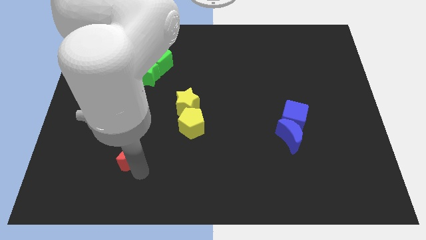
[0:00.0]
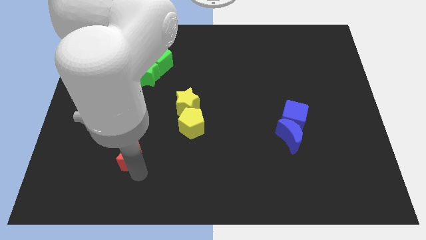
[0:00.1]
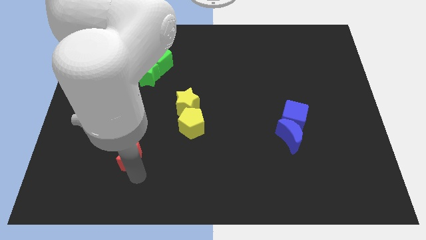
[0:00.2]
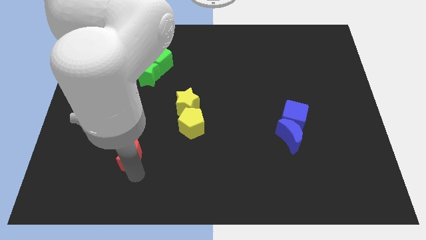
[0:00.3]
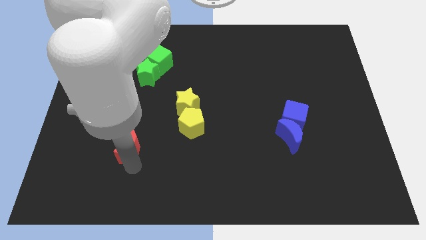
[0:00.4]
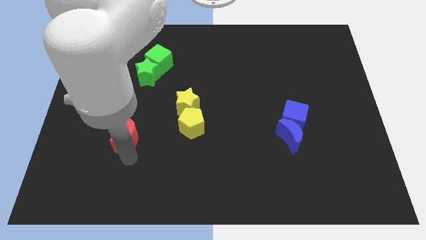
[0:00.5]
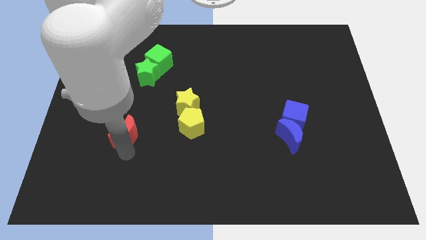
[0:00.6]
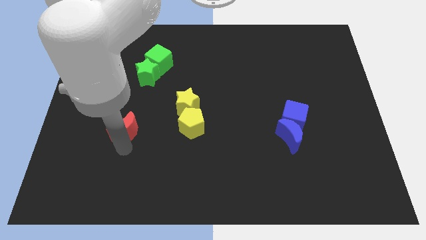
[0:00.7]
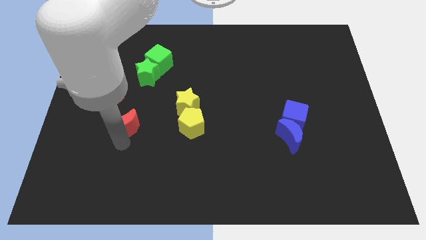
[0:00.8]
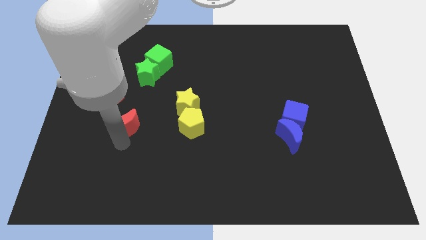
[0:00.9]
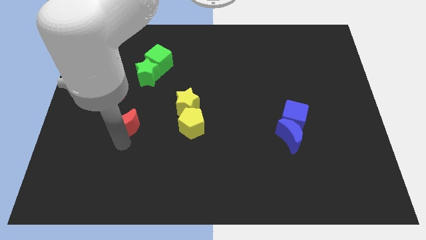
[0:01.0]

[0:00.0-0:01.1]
move the red crescent parallel to the left of the yellow pentagon

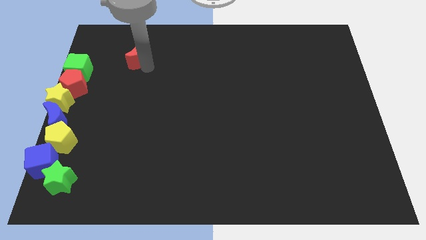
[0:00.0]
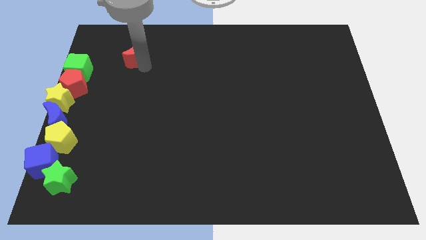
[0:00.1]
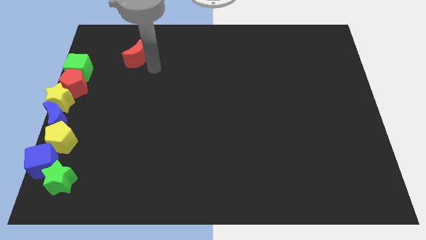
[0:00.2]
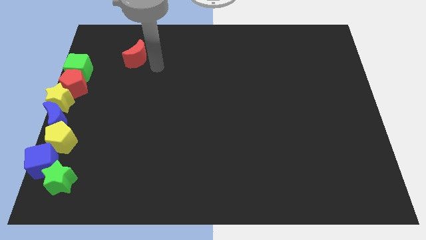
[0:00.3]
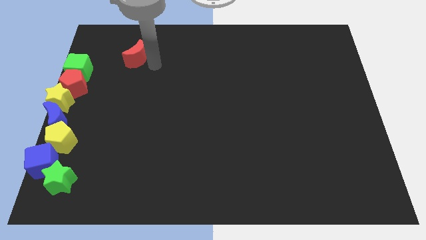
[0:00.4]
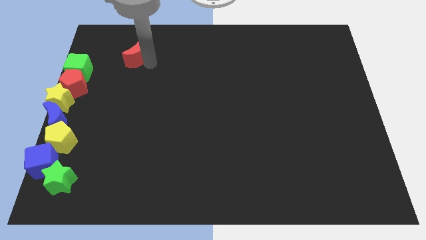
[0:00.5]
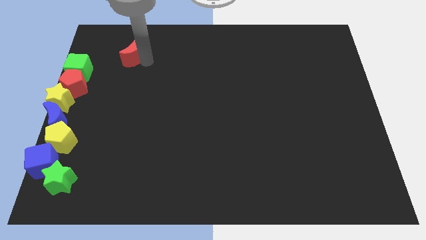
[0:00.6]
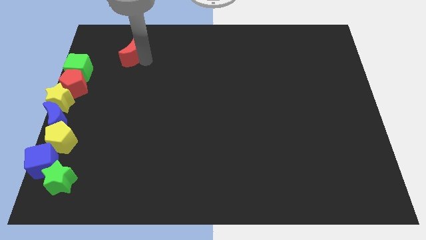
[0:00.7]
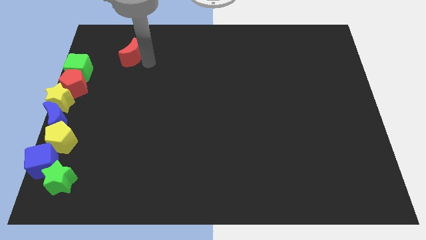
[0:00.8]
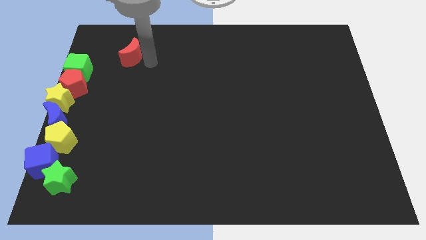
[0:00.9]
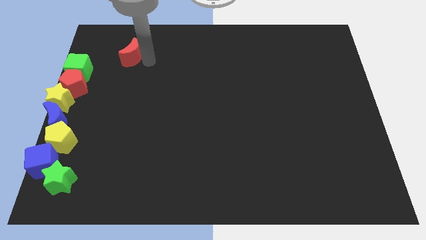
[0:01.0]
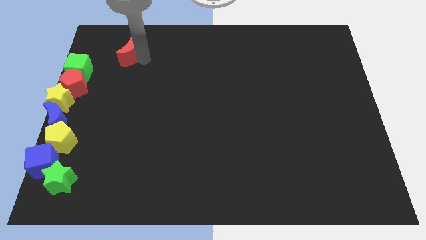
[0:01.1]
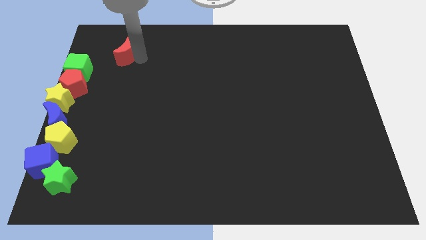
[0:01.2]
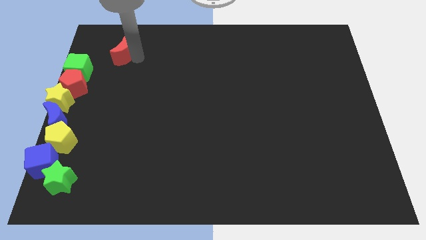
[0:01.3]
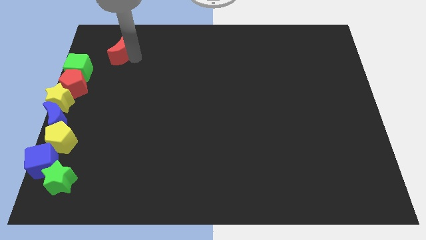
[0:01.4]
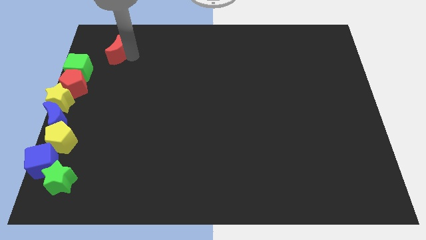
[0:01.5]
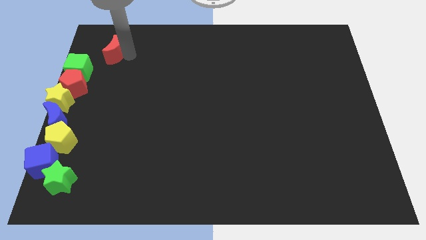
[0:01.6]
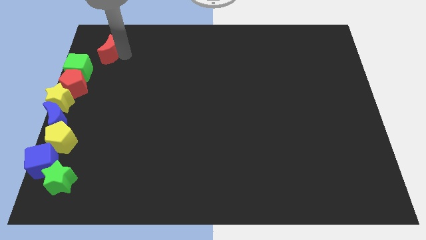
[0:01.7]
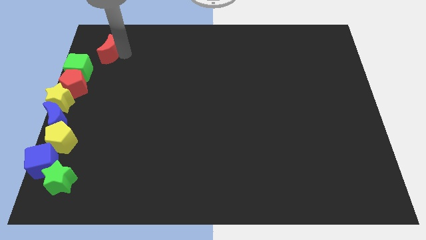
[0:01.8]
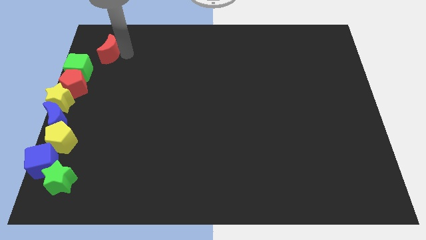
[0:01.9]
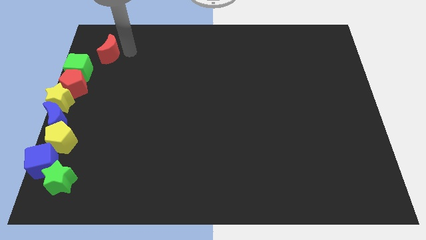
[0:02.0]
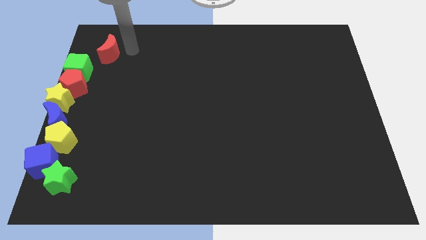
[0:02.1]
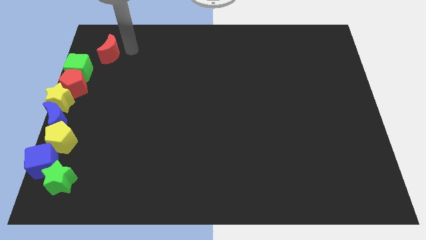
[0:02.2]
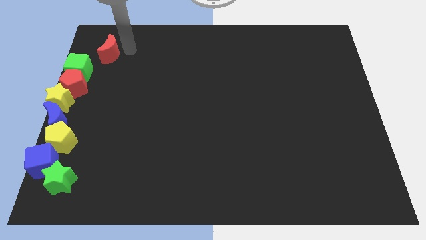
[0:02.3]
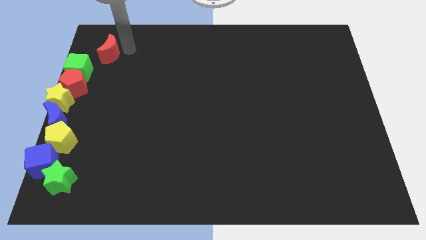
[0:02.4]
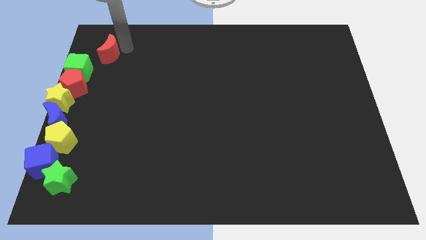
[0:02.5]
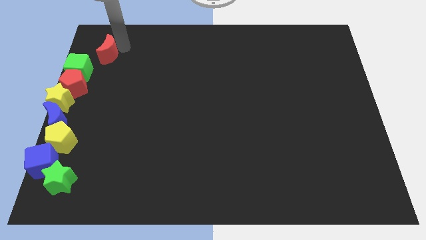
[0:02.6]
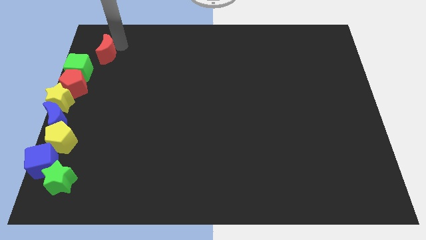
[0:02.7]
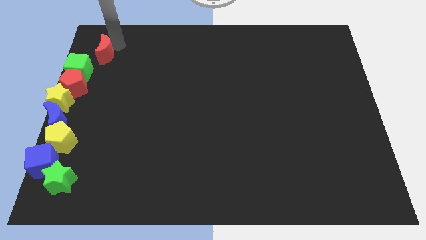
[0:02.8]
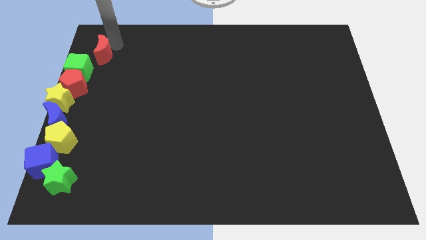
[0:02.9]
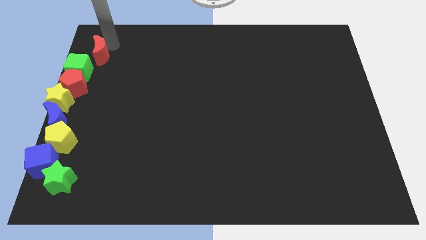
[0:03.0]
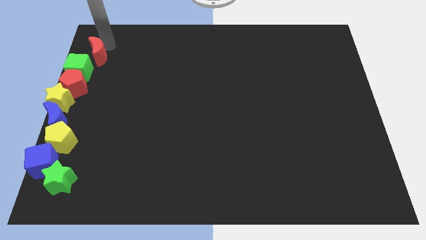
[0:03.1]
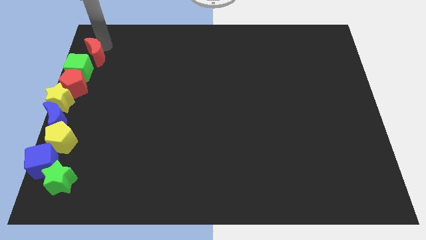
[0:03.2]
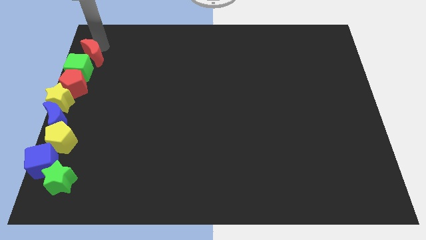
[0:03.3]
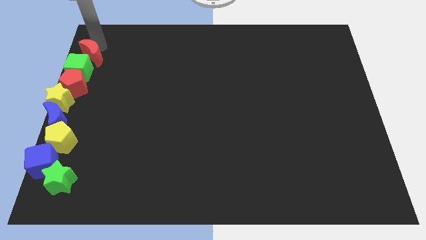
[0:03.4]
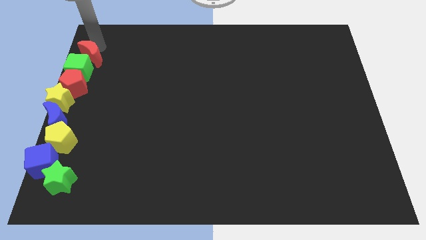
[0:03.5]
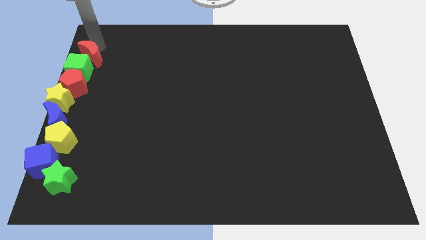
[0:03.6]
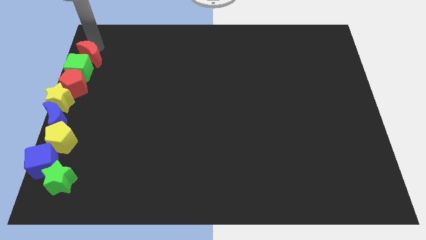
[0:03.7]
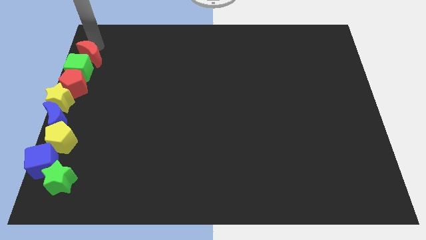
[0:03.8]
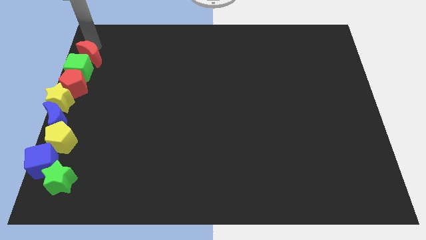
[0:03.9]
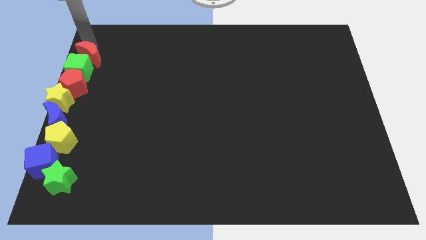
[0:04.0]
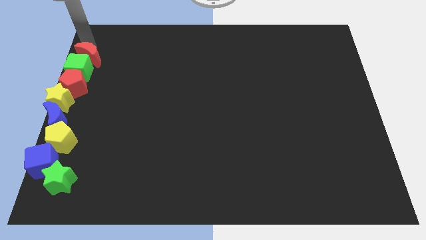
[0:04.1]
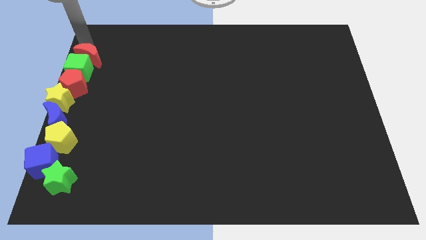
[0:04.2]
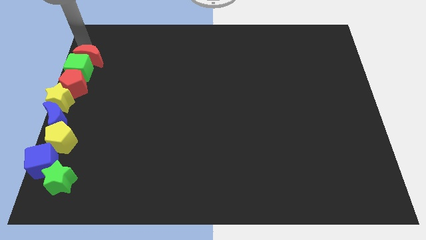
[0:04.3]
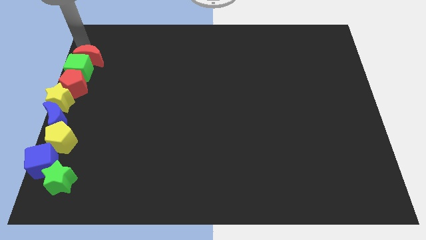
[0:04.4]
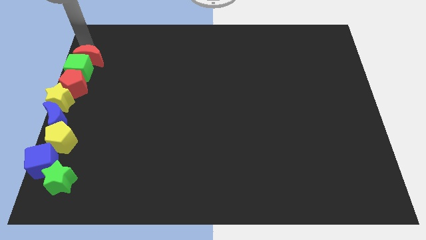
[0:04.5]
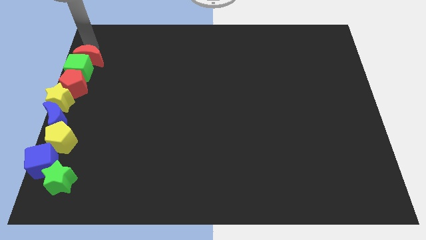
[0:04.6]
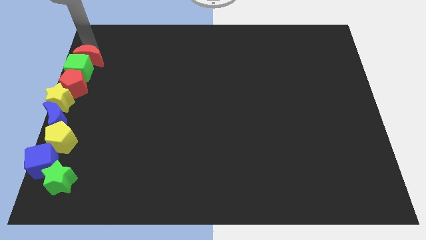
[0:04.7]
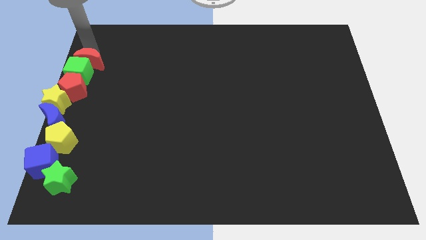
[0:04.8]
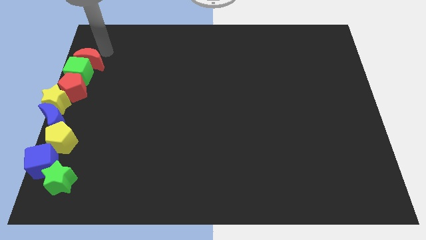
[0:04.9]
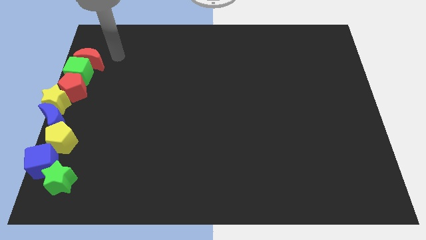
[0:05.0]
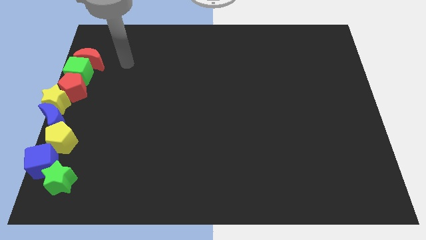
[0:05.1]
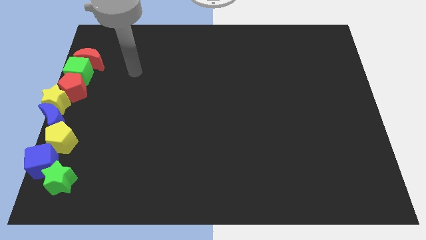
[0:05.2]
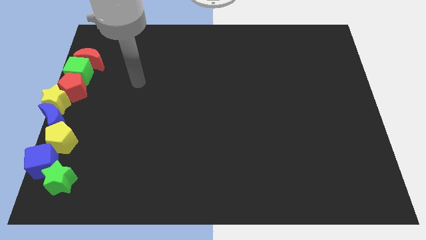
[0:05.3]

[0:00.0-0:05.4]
place the red crescent above the green cube

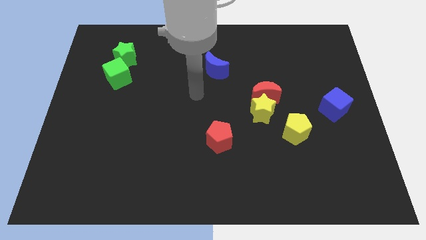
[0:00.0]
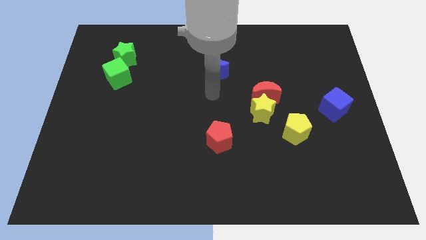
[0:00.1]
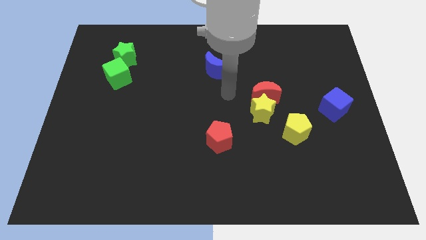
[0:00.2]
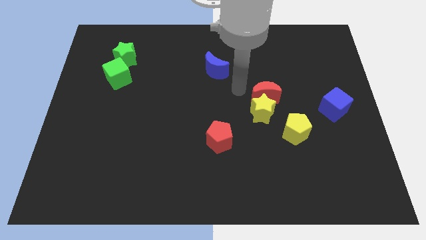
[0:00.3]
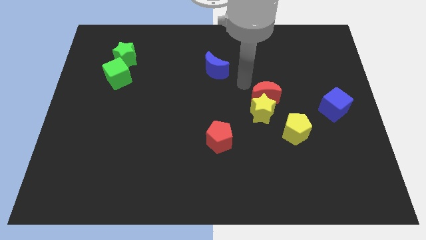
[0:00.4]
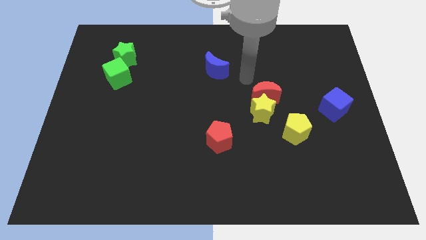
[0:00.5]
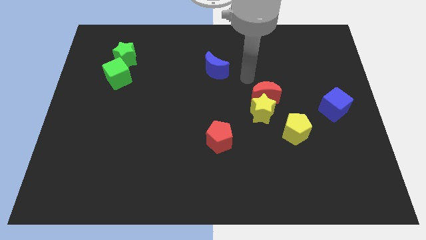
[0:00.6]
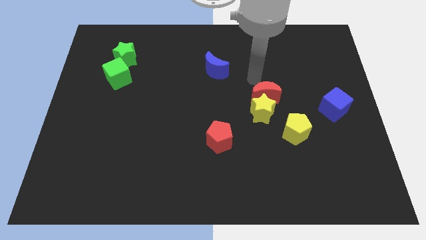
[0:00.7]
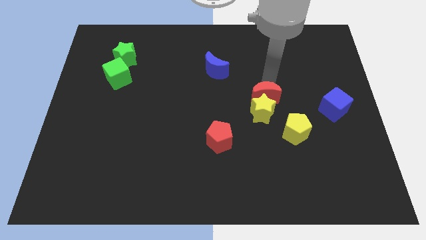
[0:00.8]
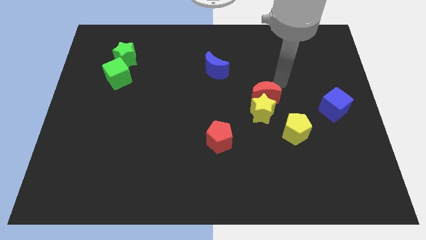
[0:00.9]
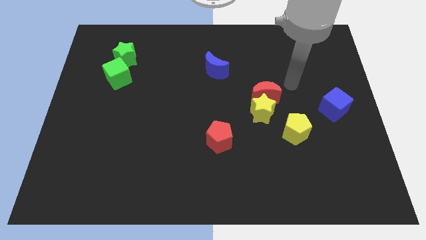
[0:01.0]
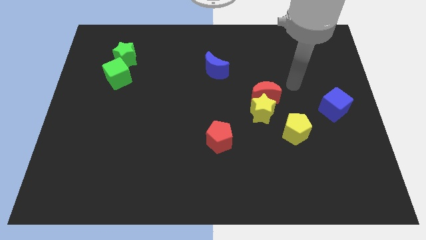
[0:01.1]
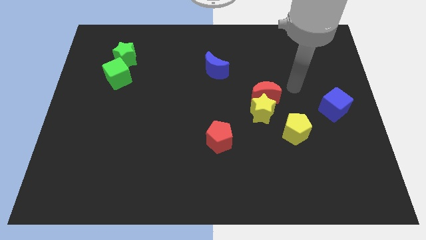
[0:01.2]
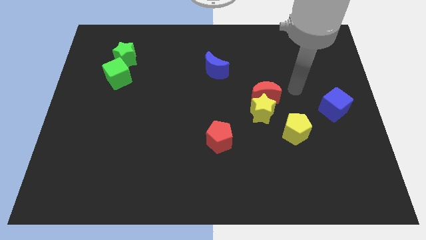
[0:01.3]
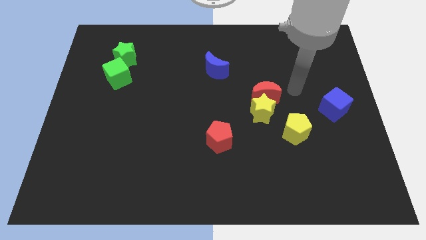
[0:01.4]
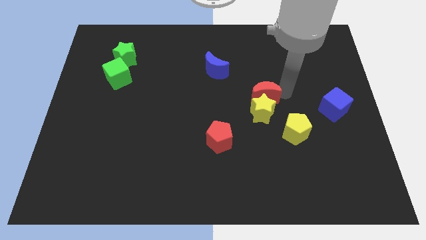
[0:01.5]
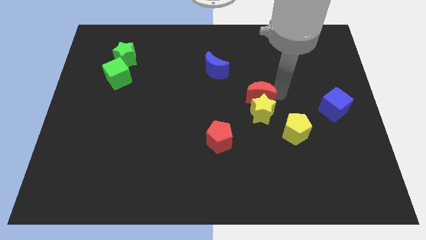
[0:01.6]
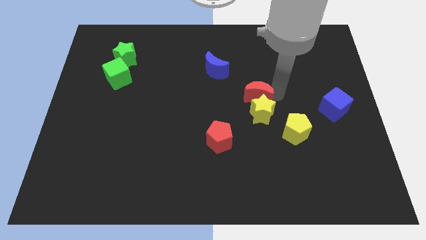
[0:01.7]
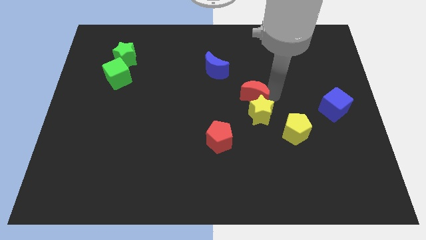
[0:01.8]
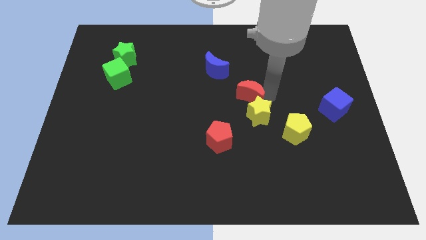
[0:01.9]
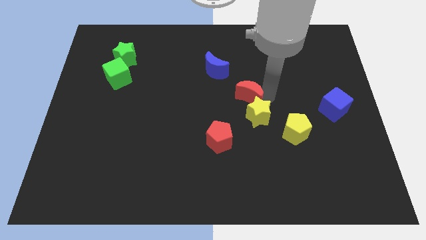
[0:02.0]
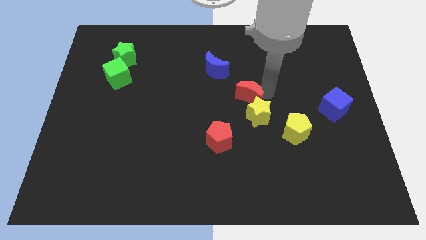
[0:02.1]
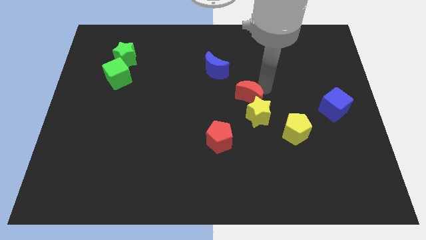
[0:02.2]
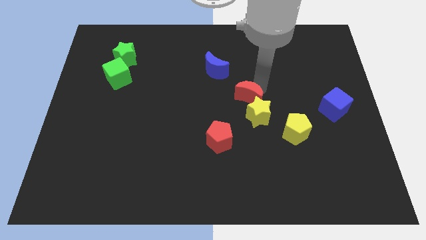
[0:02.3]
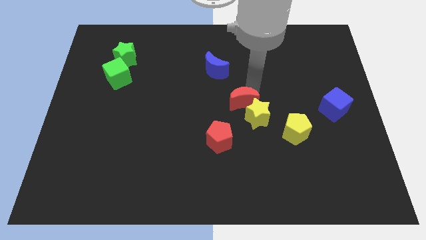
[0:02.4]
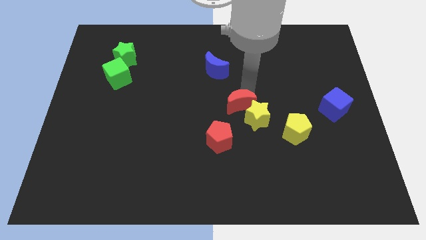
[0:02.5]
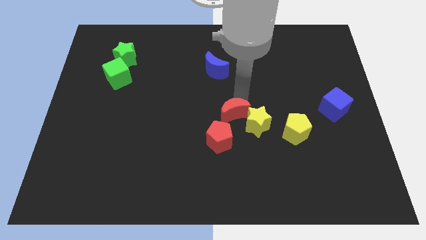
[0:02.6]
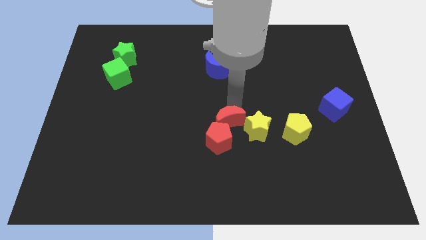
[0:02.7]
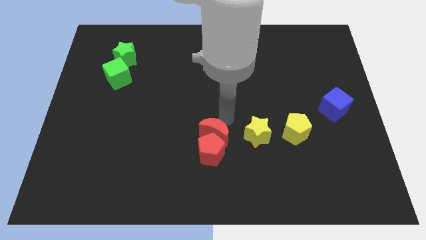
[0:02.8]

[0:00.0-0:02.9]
place the yellow star left to the yellow pentagon
